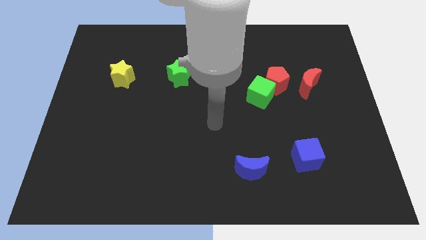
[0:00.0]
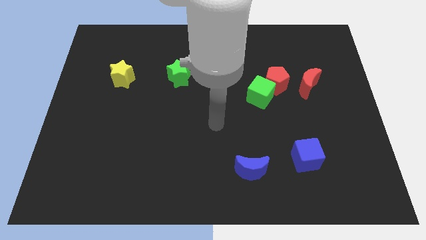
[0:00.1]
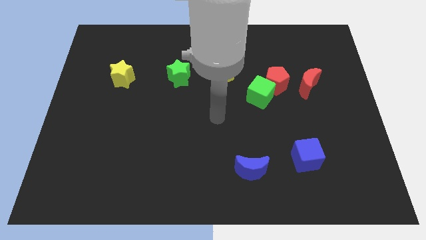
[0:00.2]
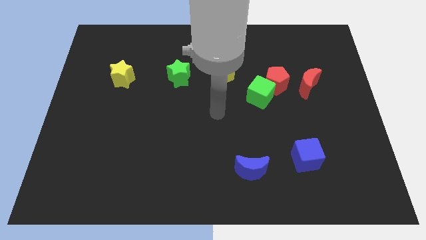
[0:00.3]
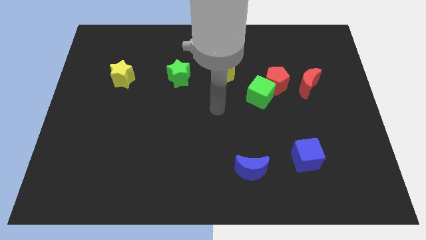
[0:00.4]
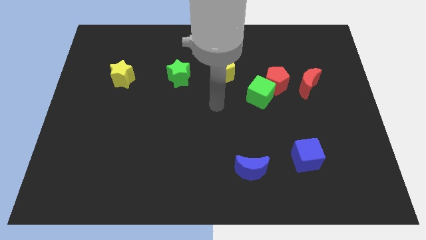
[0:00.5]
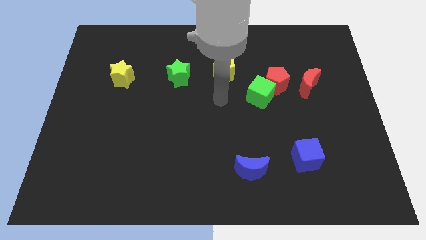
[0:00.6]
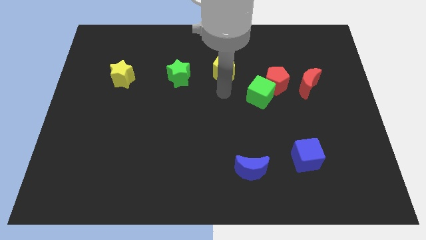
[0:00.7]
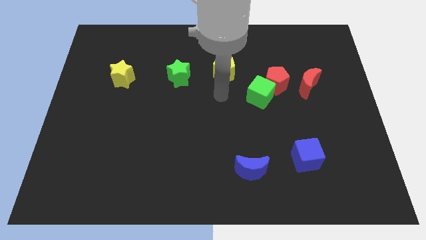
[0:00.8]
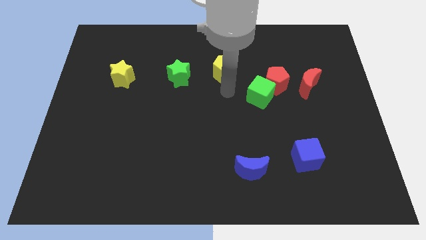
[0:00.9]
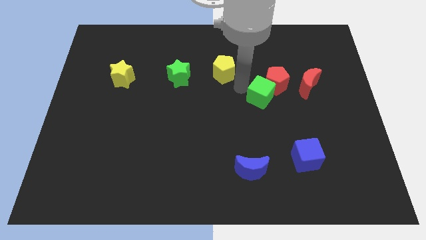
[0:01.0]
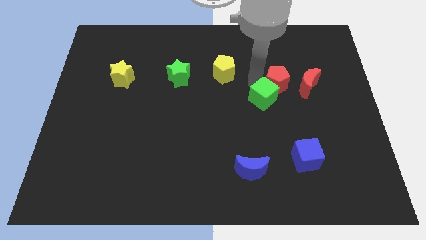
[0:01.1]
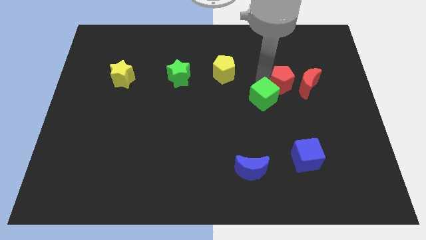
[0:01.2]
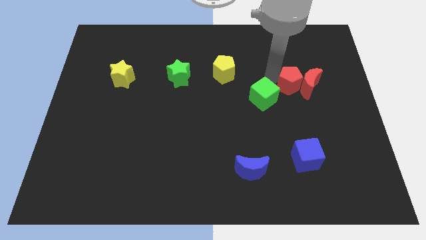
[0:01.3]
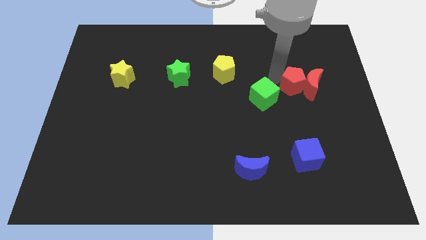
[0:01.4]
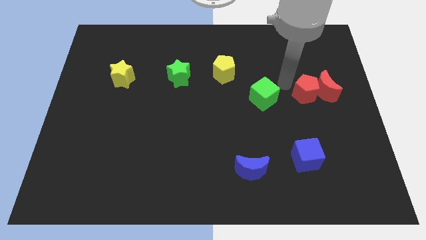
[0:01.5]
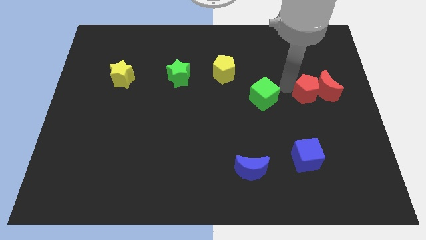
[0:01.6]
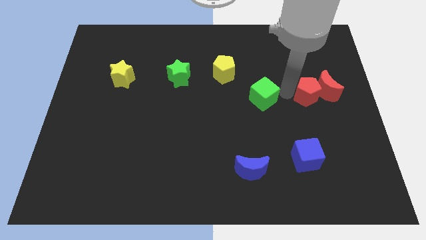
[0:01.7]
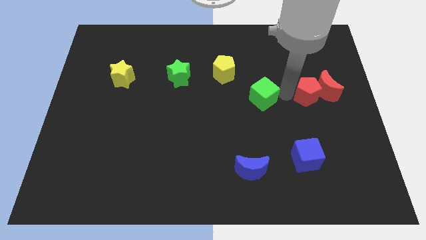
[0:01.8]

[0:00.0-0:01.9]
push the red pentagon into the red crescent

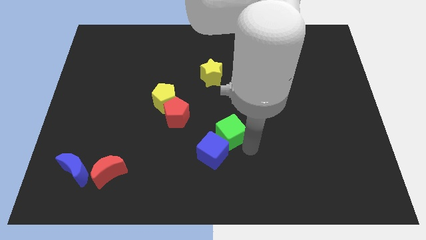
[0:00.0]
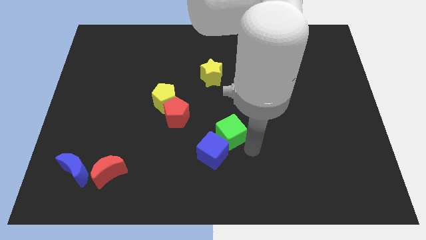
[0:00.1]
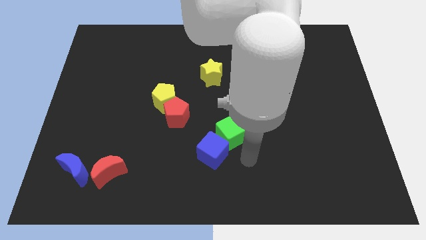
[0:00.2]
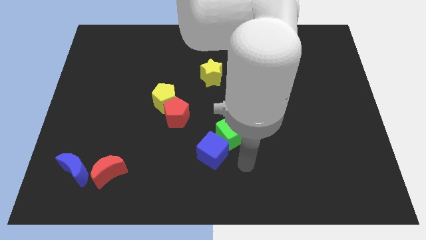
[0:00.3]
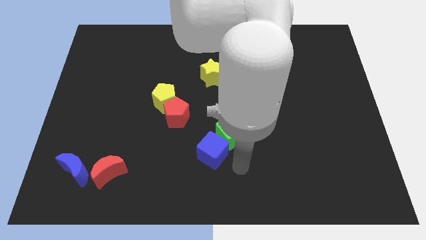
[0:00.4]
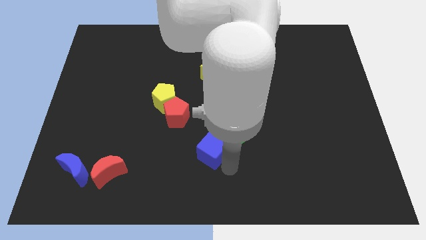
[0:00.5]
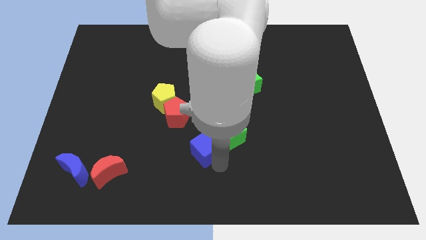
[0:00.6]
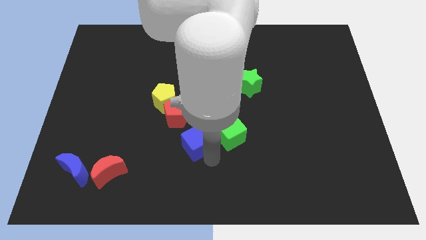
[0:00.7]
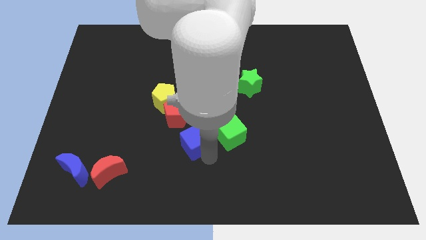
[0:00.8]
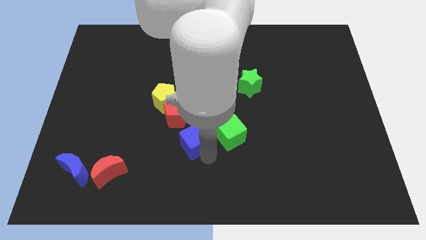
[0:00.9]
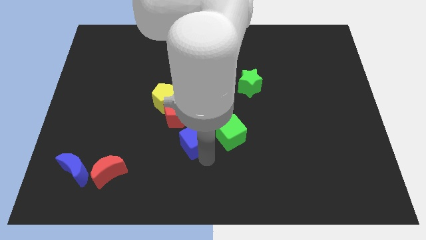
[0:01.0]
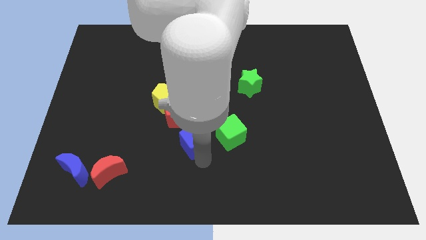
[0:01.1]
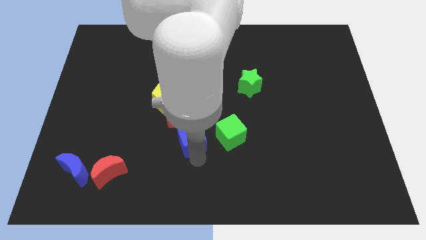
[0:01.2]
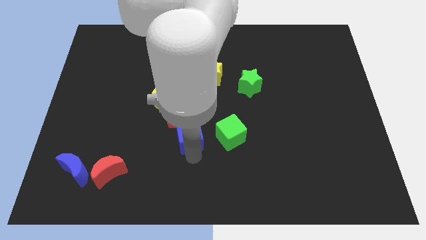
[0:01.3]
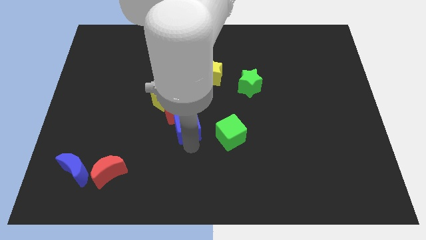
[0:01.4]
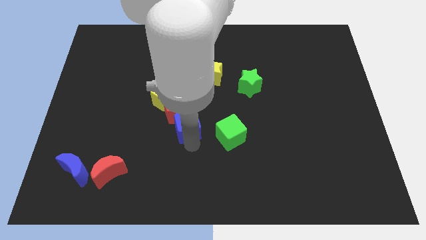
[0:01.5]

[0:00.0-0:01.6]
move blue cube towards the red pentagon

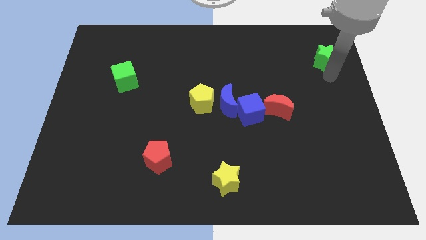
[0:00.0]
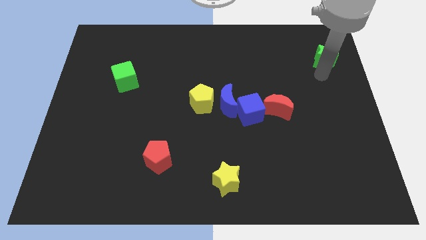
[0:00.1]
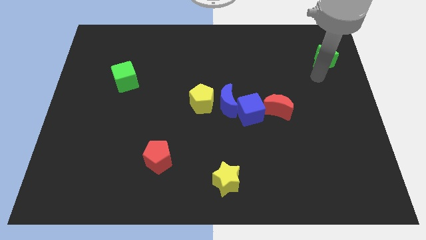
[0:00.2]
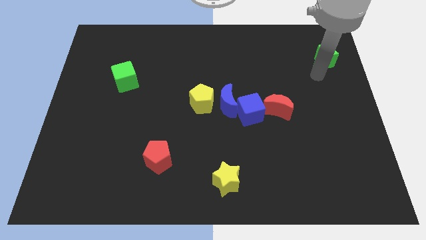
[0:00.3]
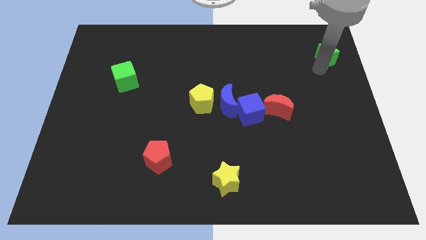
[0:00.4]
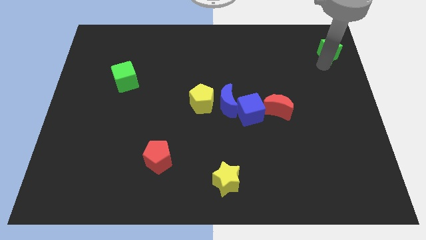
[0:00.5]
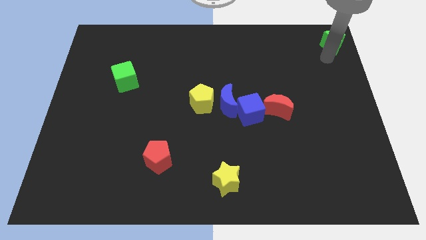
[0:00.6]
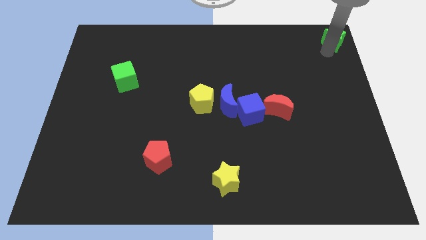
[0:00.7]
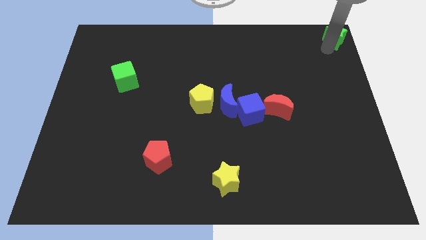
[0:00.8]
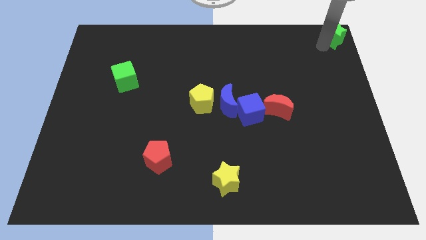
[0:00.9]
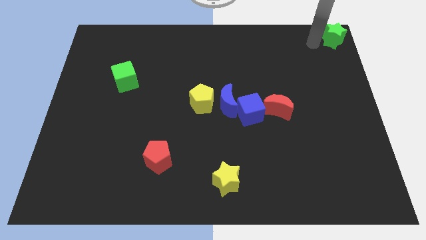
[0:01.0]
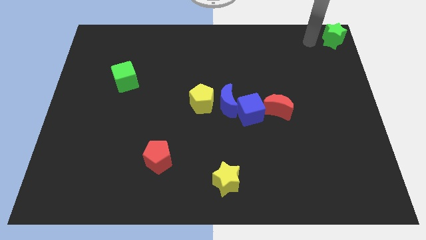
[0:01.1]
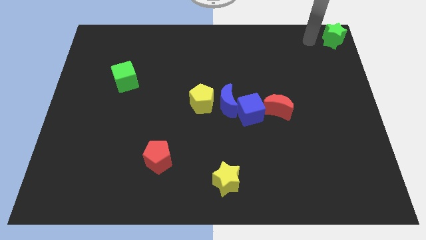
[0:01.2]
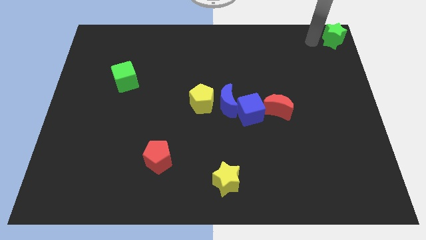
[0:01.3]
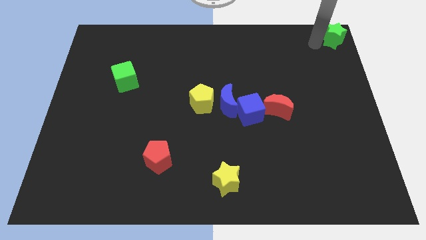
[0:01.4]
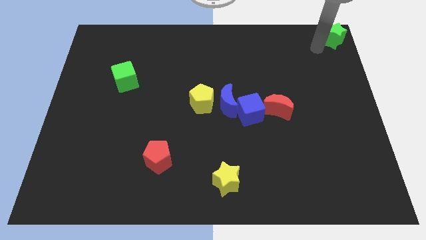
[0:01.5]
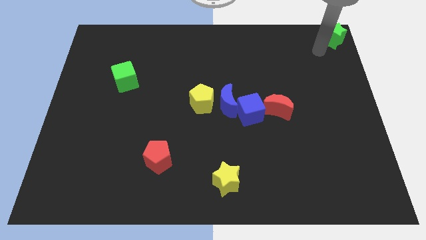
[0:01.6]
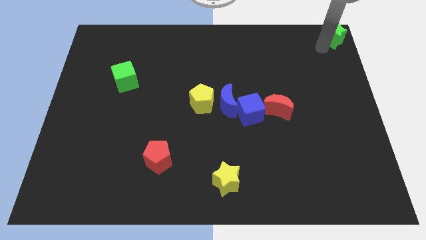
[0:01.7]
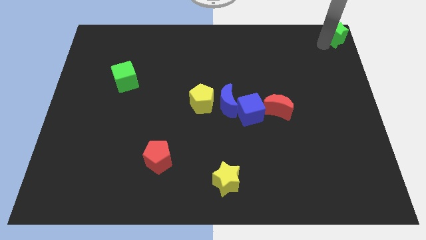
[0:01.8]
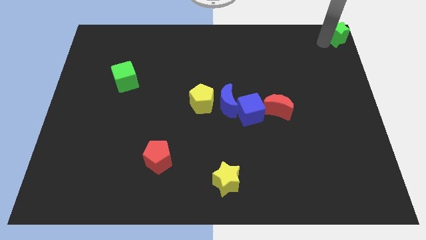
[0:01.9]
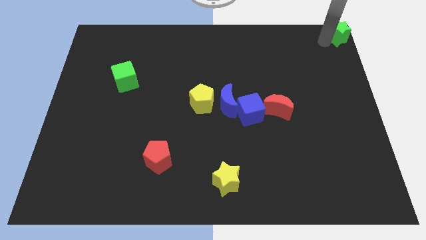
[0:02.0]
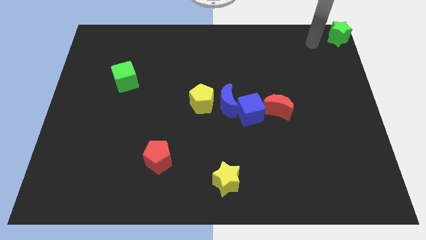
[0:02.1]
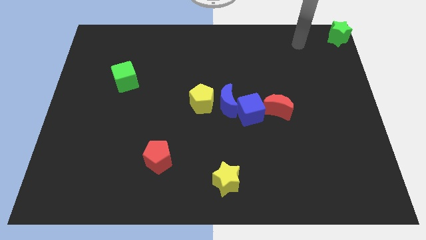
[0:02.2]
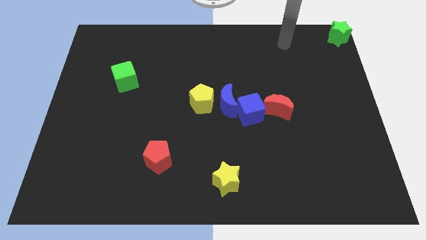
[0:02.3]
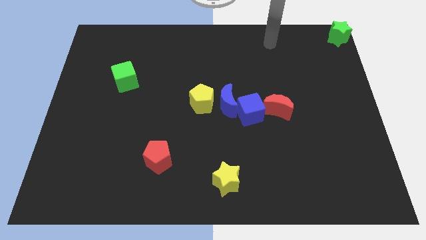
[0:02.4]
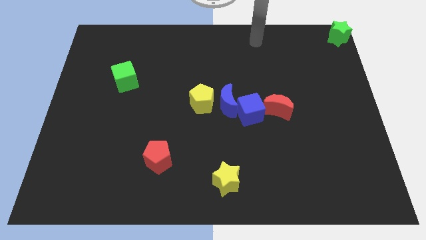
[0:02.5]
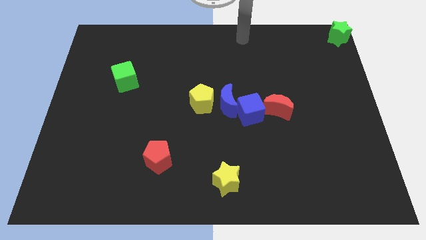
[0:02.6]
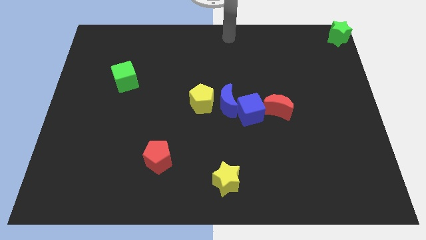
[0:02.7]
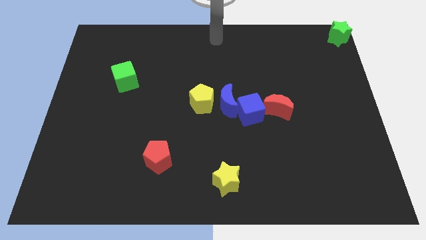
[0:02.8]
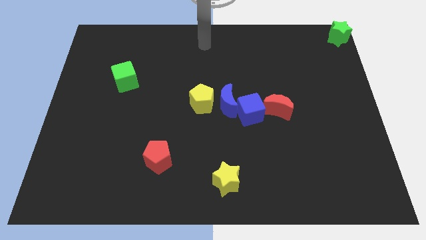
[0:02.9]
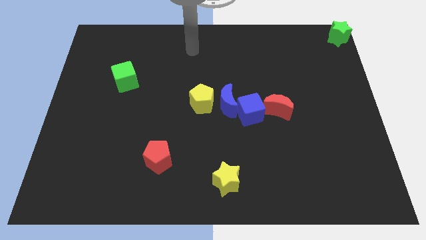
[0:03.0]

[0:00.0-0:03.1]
push the green star at the top right corner of the board and go away

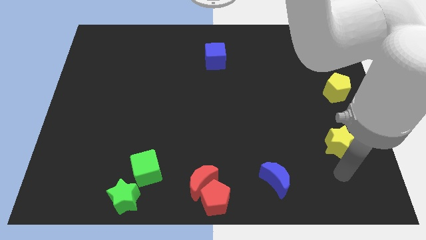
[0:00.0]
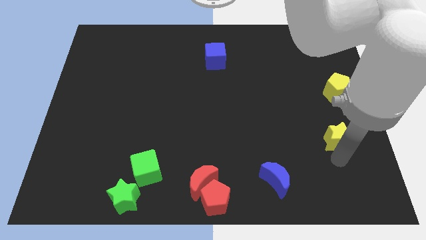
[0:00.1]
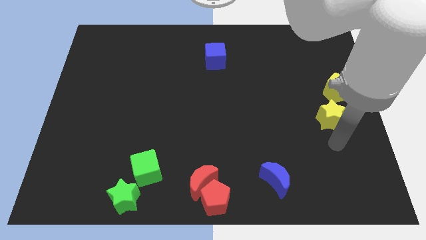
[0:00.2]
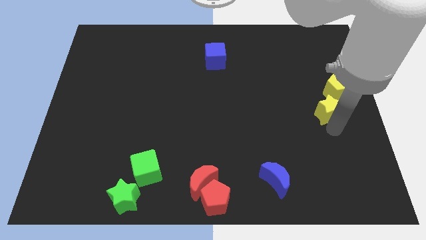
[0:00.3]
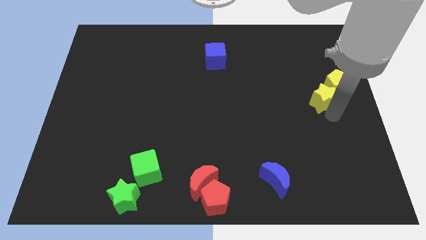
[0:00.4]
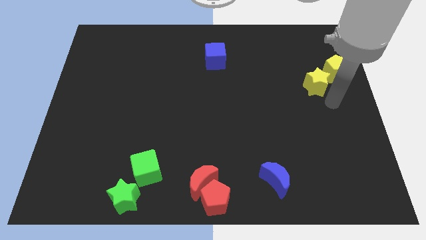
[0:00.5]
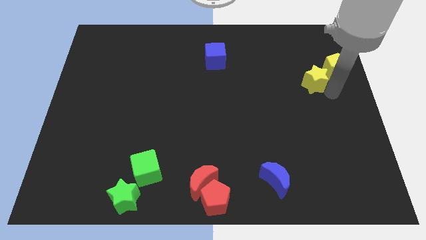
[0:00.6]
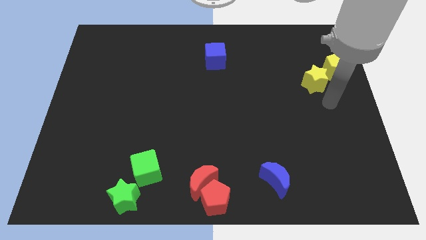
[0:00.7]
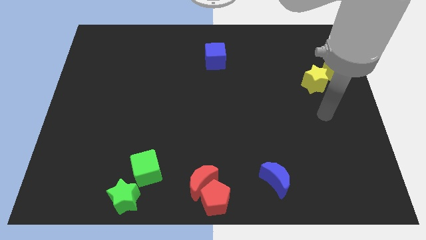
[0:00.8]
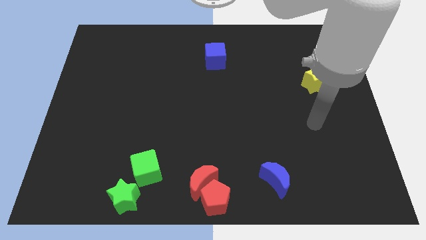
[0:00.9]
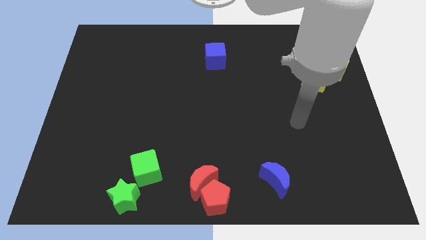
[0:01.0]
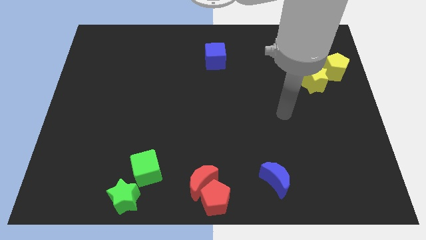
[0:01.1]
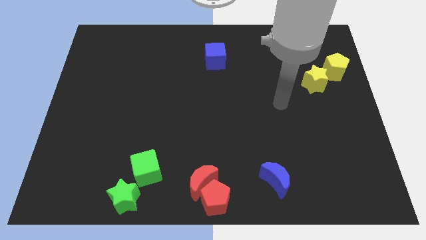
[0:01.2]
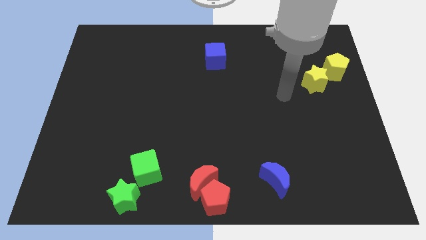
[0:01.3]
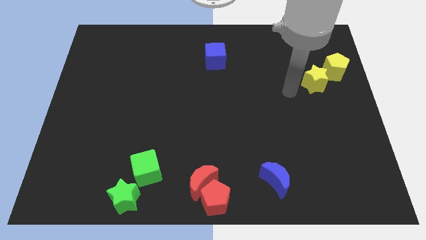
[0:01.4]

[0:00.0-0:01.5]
touch the yellow pentagon with the help of yellow star

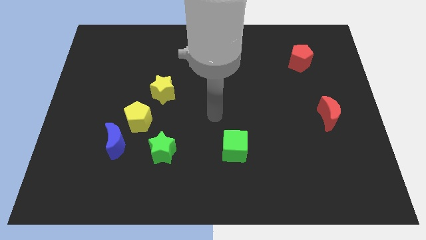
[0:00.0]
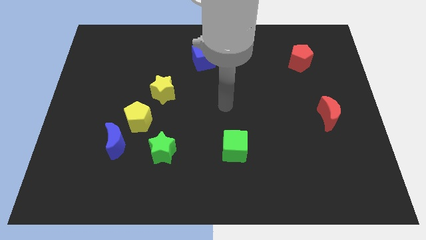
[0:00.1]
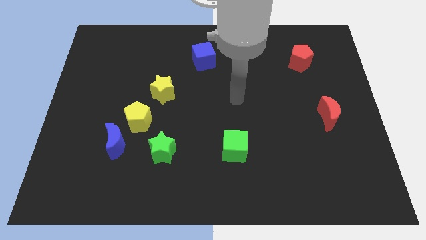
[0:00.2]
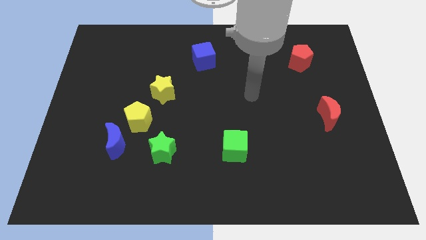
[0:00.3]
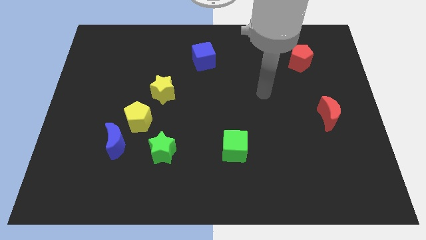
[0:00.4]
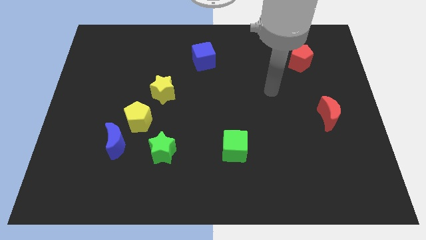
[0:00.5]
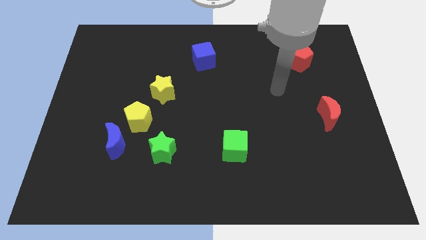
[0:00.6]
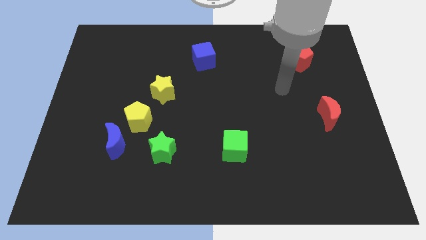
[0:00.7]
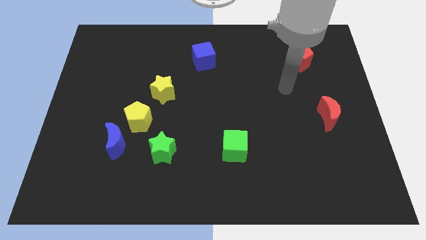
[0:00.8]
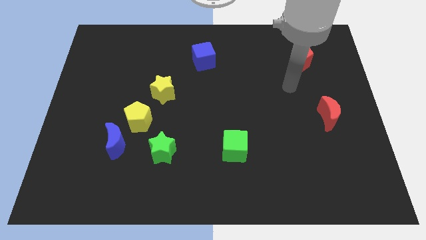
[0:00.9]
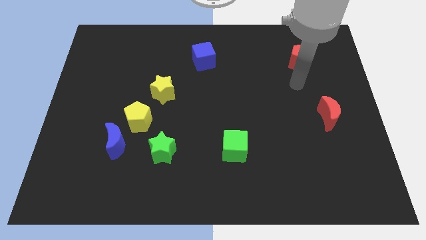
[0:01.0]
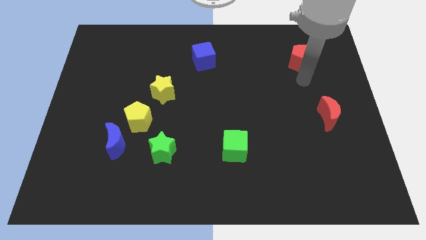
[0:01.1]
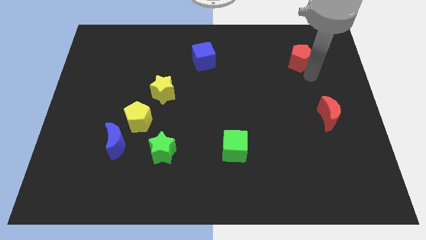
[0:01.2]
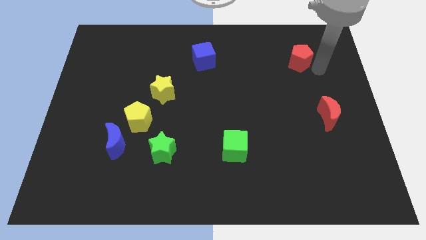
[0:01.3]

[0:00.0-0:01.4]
move the arm close to the red pentagon
